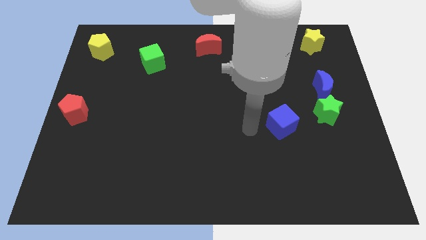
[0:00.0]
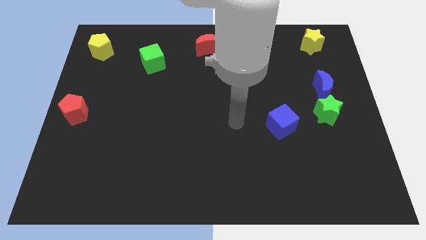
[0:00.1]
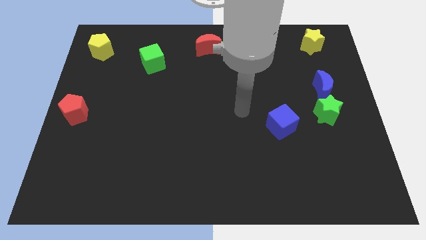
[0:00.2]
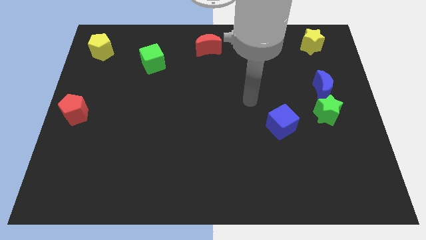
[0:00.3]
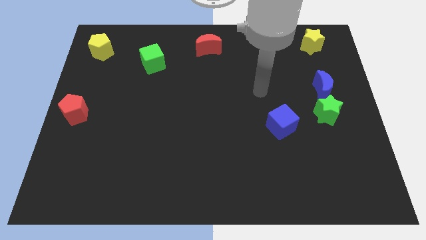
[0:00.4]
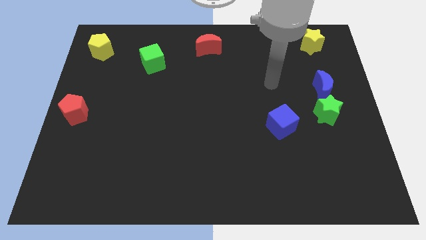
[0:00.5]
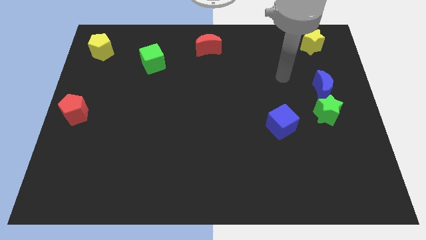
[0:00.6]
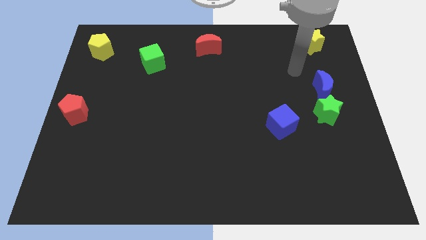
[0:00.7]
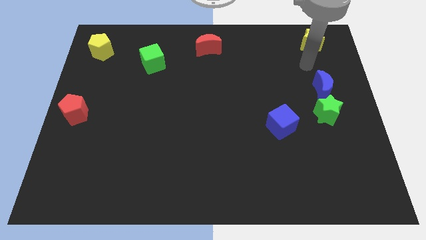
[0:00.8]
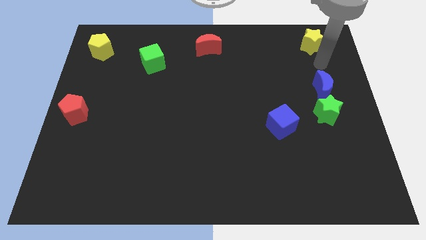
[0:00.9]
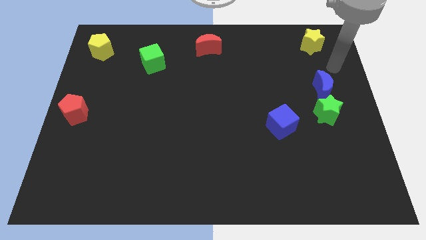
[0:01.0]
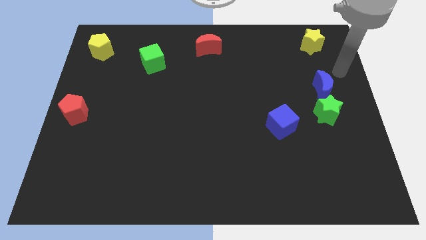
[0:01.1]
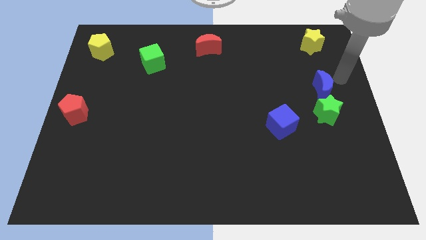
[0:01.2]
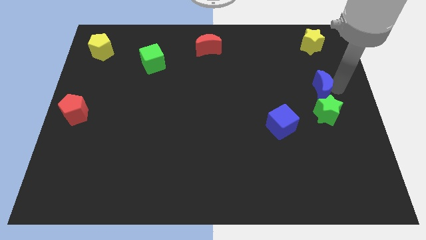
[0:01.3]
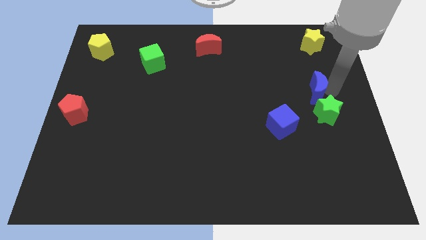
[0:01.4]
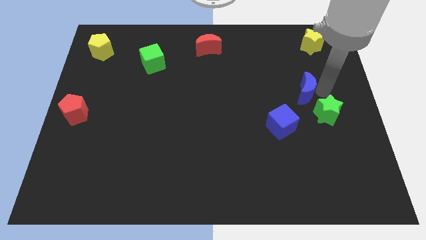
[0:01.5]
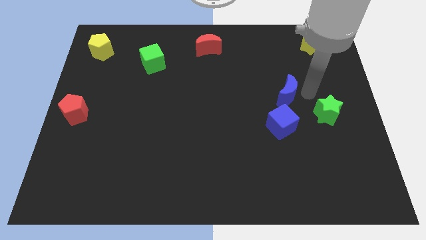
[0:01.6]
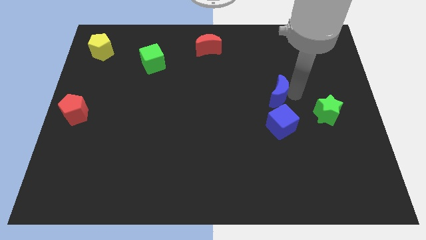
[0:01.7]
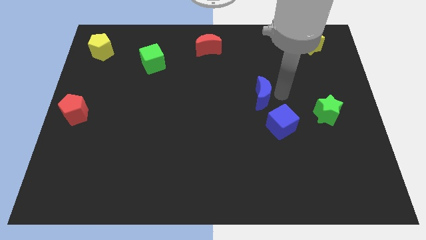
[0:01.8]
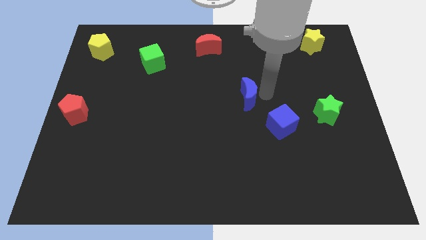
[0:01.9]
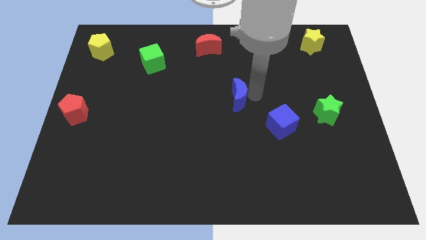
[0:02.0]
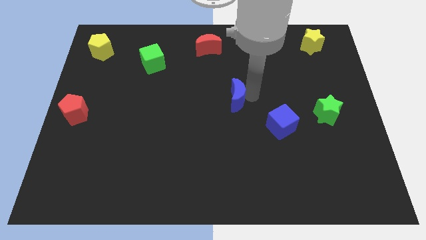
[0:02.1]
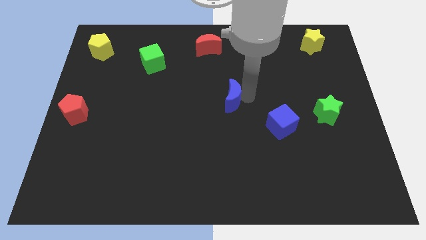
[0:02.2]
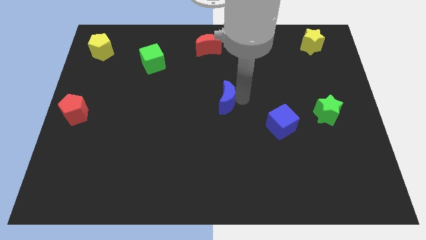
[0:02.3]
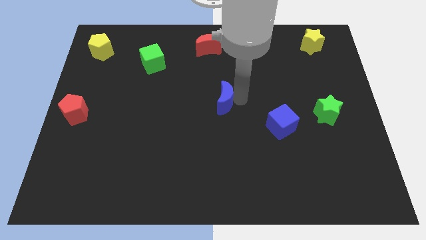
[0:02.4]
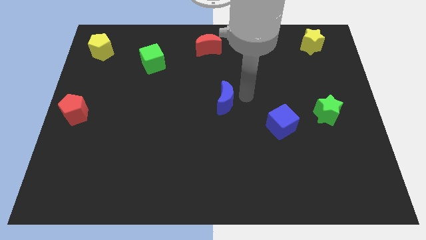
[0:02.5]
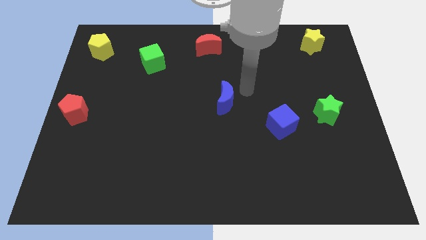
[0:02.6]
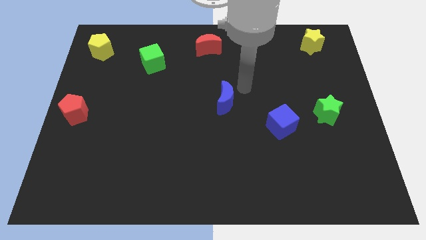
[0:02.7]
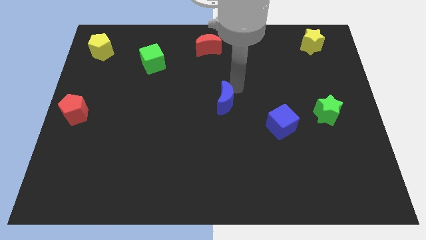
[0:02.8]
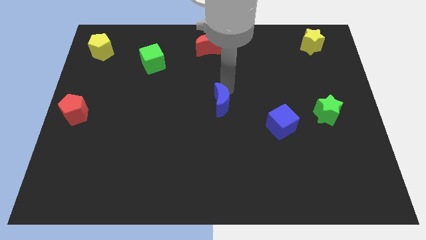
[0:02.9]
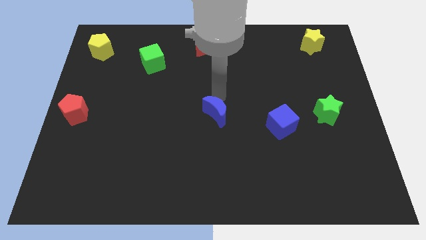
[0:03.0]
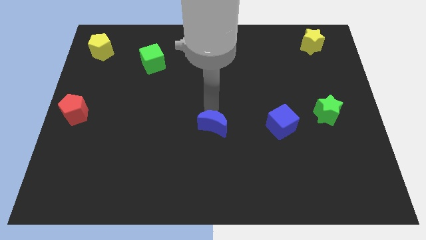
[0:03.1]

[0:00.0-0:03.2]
move the blue crescent to the center of the board

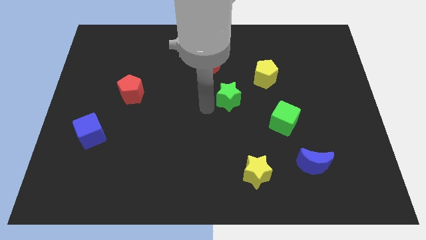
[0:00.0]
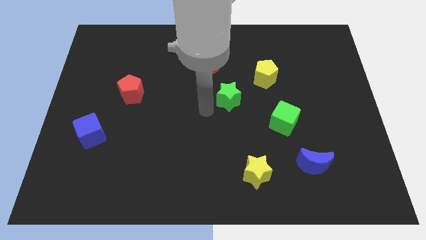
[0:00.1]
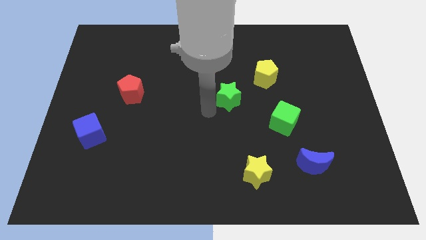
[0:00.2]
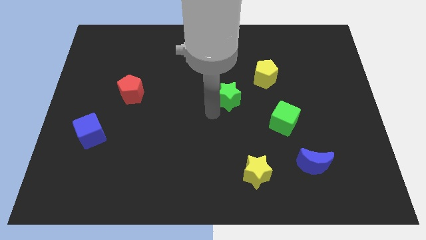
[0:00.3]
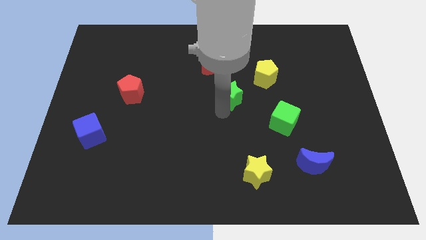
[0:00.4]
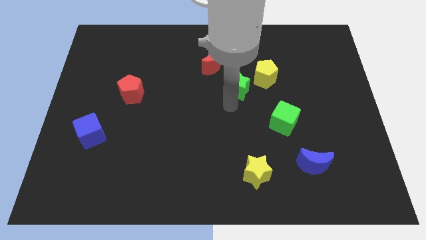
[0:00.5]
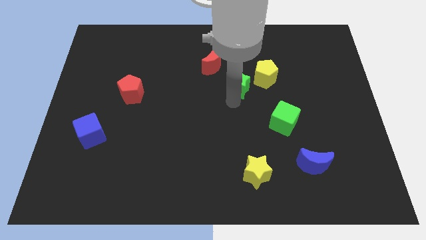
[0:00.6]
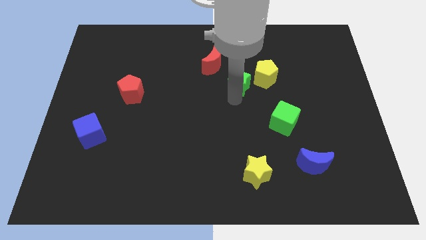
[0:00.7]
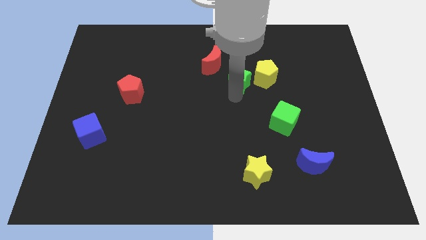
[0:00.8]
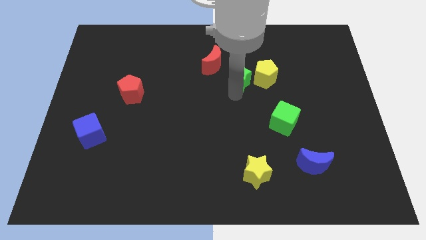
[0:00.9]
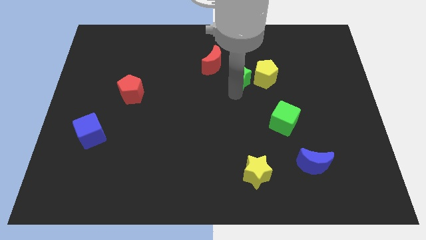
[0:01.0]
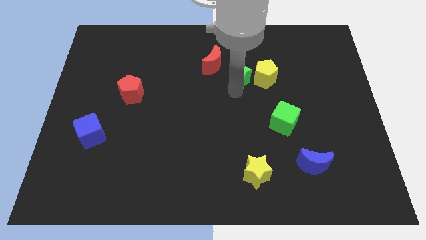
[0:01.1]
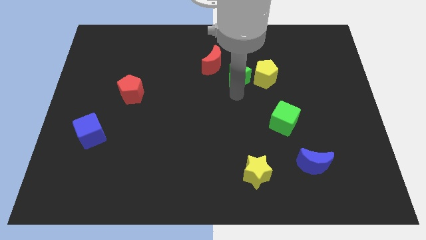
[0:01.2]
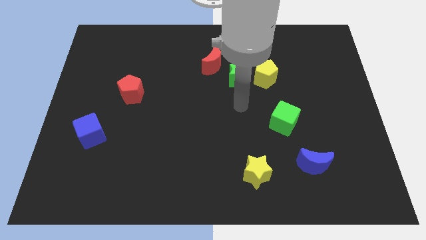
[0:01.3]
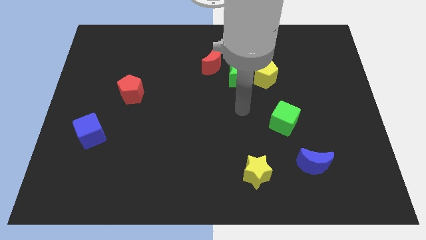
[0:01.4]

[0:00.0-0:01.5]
move the green star to the left of the yellow pentagon

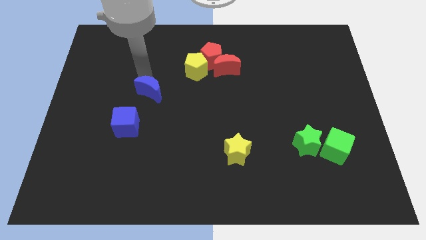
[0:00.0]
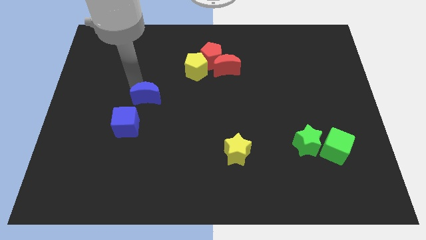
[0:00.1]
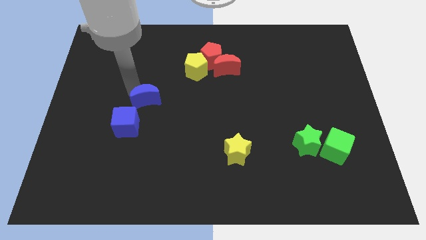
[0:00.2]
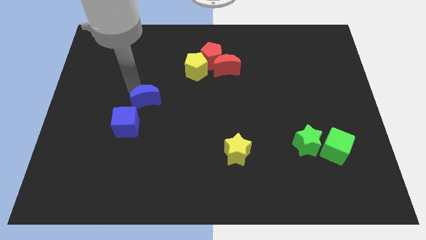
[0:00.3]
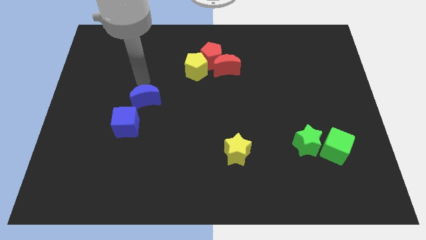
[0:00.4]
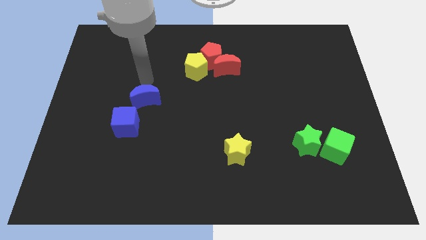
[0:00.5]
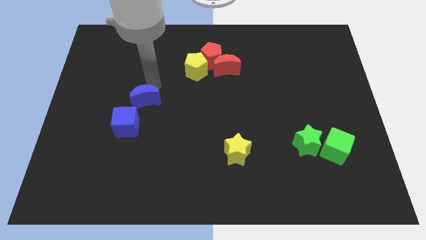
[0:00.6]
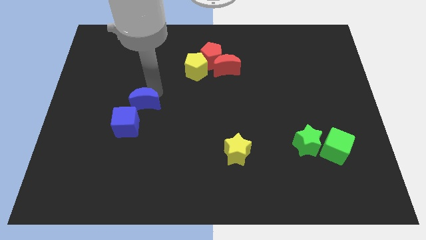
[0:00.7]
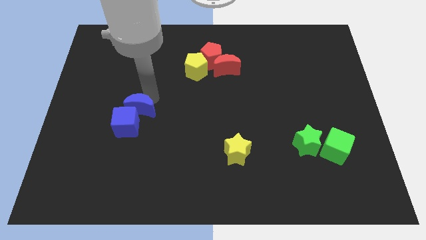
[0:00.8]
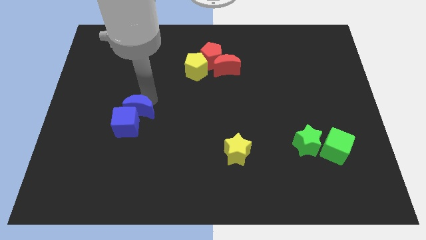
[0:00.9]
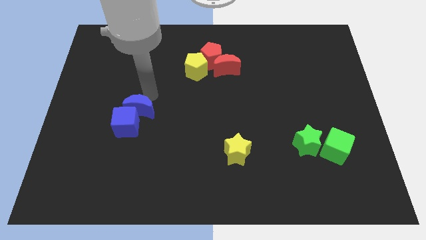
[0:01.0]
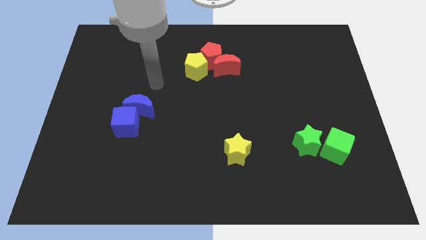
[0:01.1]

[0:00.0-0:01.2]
push the blue crescent into the blue cube

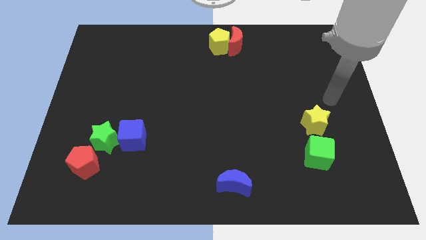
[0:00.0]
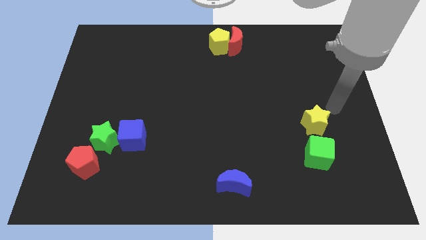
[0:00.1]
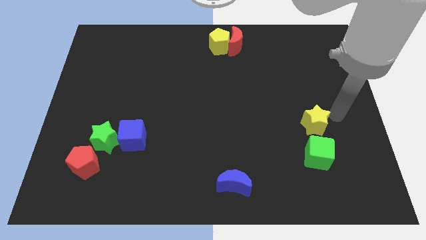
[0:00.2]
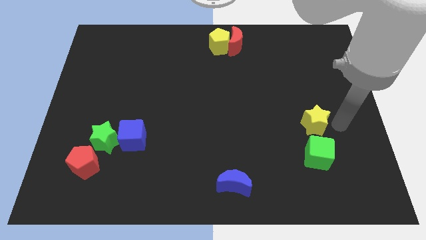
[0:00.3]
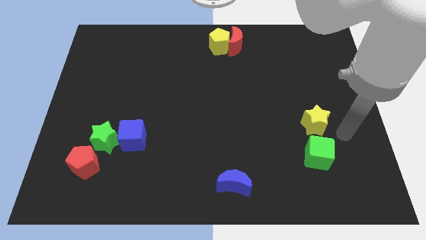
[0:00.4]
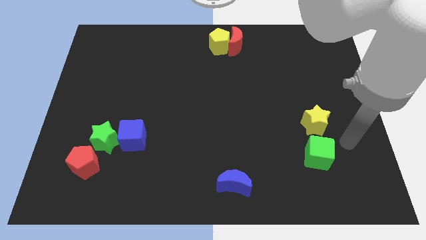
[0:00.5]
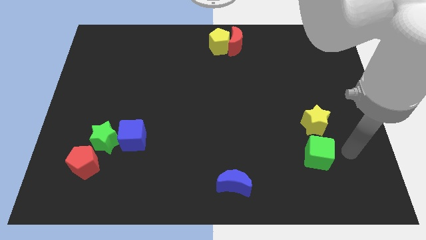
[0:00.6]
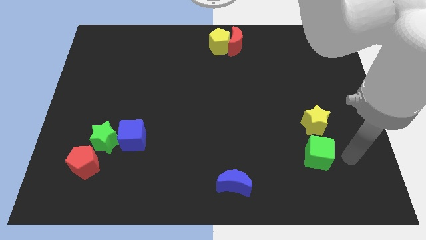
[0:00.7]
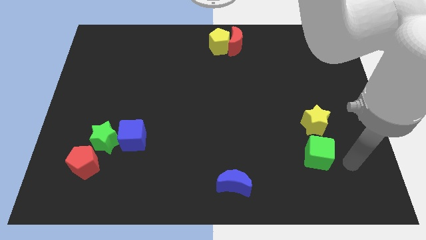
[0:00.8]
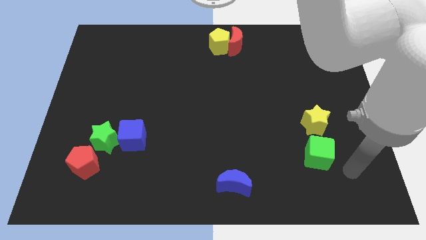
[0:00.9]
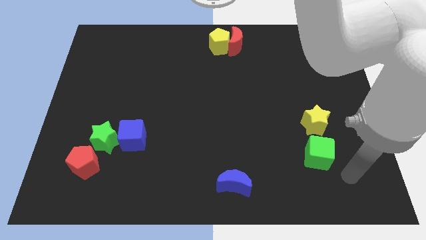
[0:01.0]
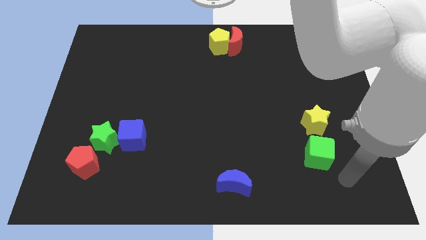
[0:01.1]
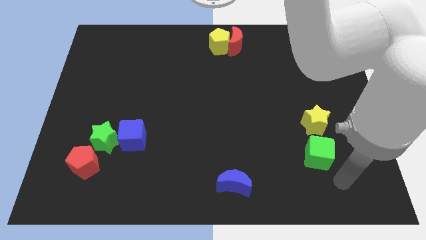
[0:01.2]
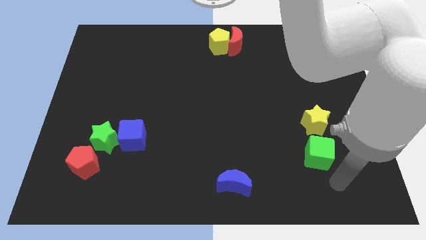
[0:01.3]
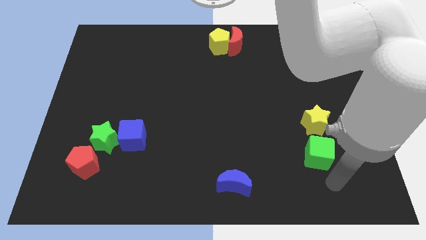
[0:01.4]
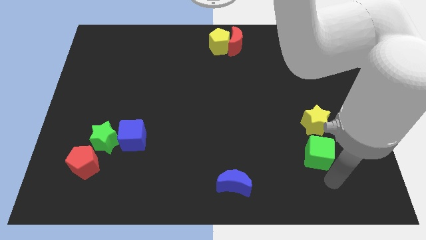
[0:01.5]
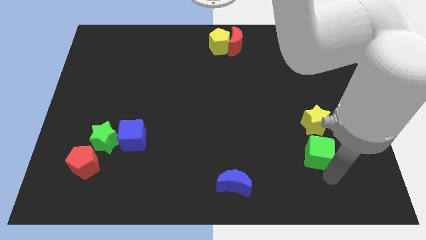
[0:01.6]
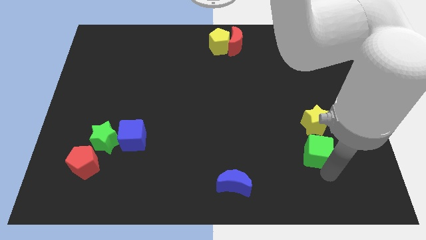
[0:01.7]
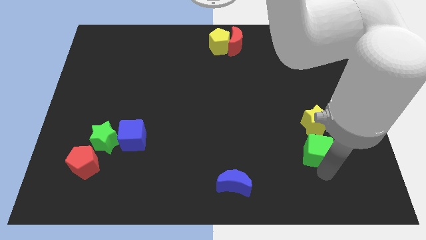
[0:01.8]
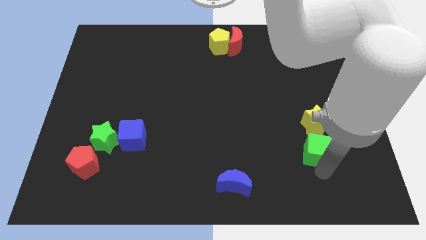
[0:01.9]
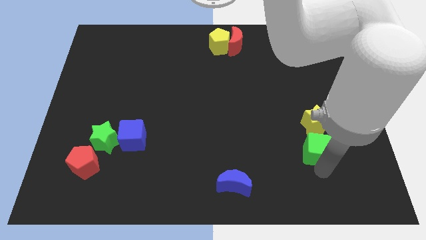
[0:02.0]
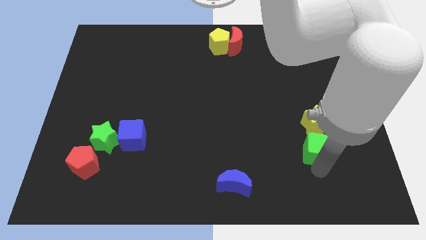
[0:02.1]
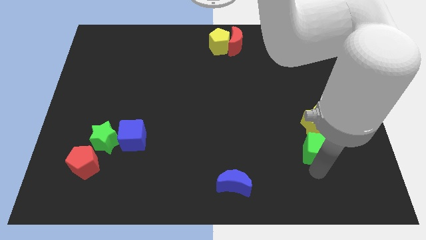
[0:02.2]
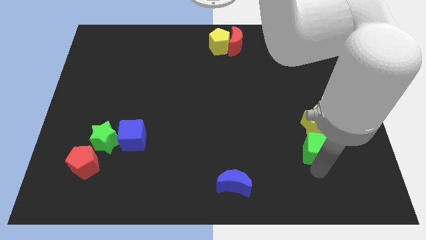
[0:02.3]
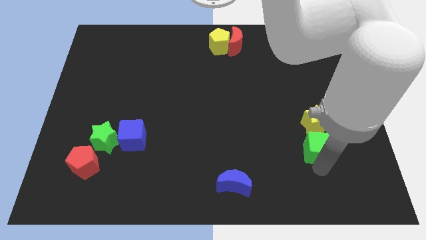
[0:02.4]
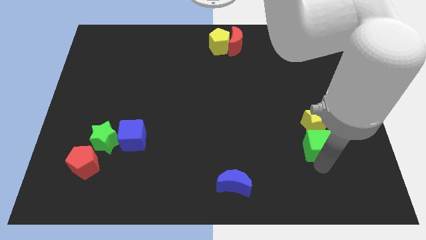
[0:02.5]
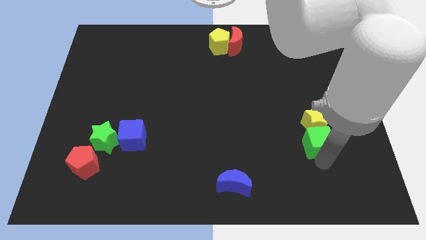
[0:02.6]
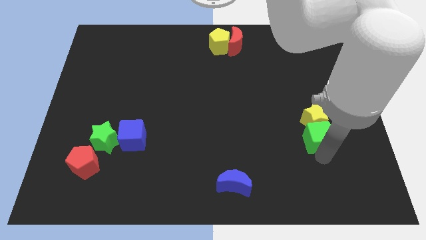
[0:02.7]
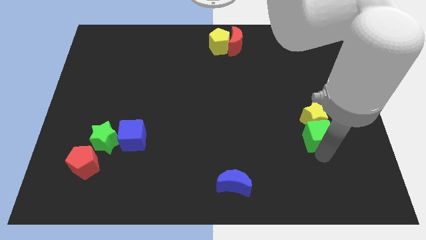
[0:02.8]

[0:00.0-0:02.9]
push the green cube into the yellow star

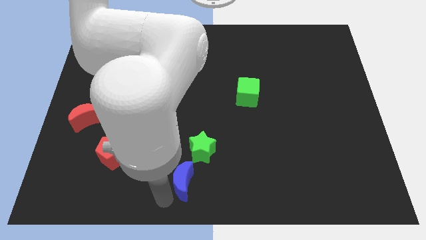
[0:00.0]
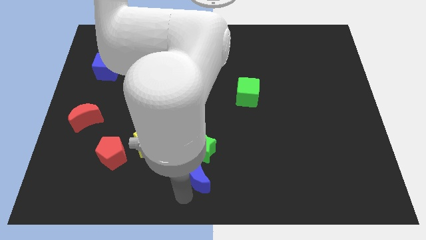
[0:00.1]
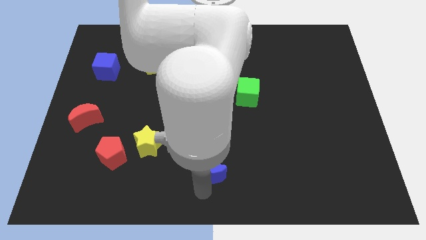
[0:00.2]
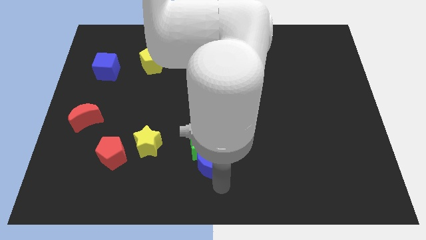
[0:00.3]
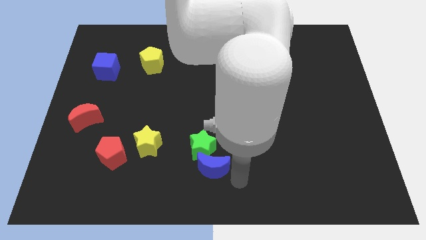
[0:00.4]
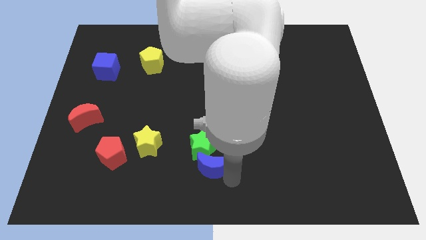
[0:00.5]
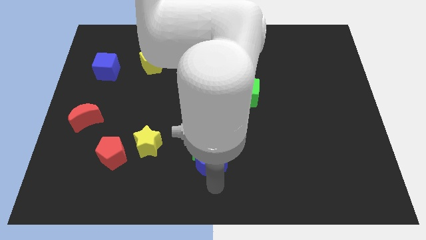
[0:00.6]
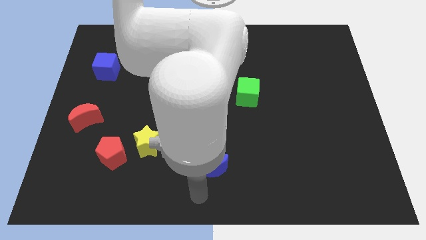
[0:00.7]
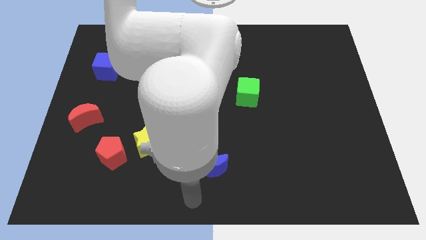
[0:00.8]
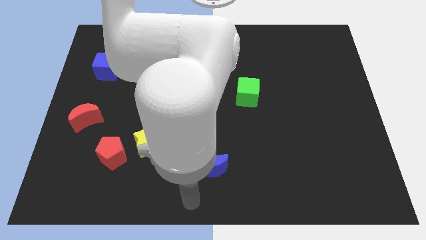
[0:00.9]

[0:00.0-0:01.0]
place the blue crescent below the green star
